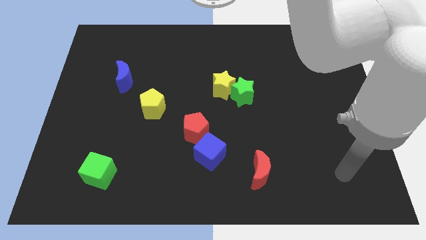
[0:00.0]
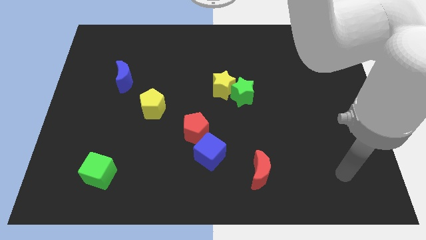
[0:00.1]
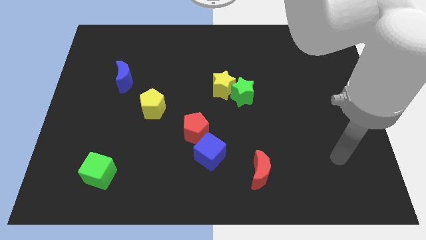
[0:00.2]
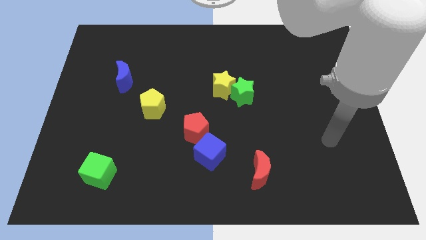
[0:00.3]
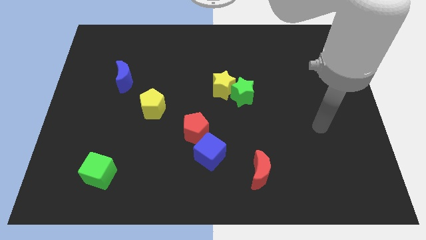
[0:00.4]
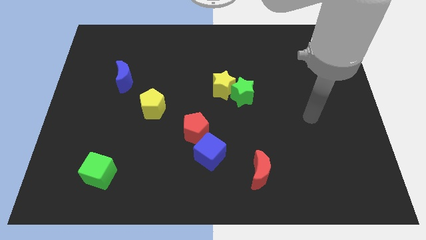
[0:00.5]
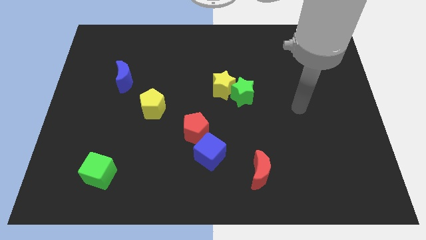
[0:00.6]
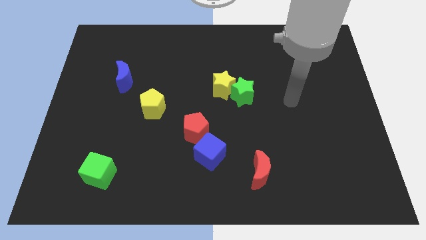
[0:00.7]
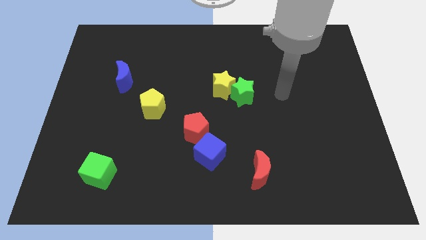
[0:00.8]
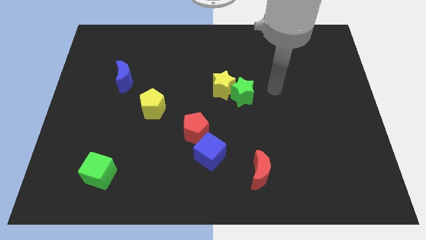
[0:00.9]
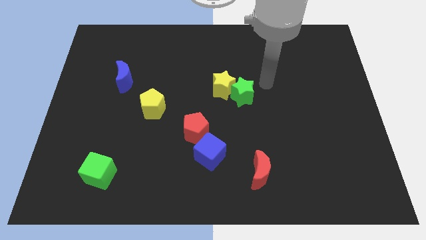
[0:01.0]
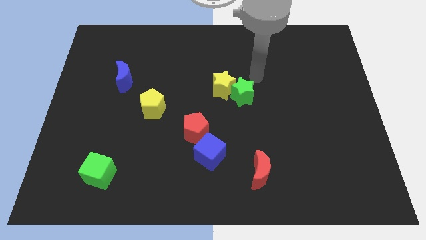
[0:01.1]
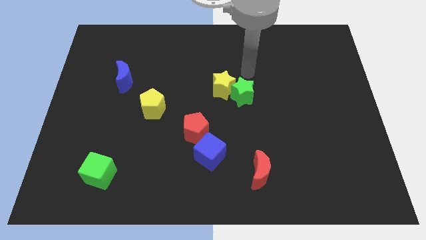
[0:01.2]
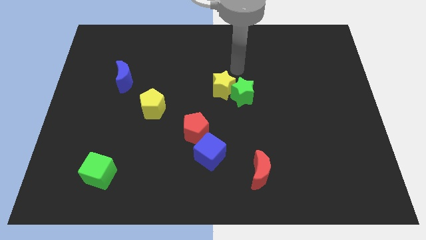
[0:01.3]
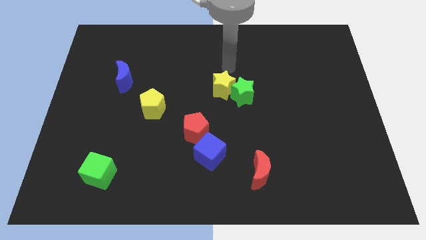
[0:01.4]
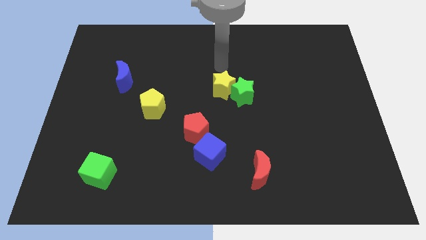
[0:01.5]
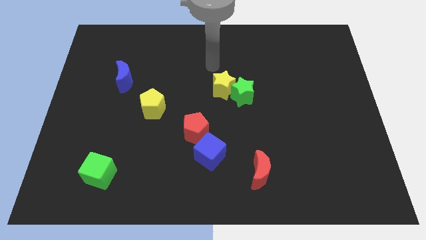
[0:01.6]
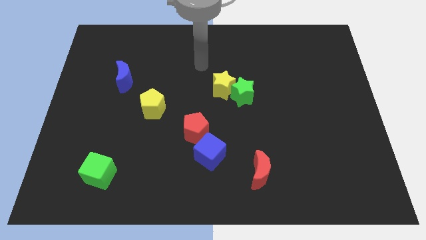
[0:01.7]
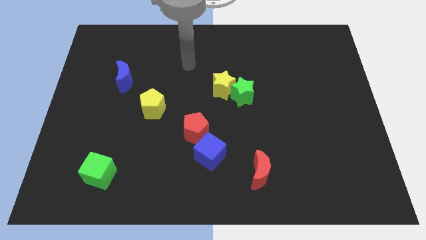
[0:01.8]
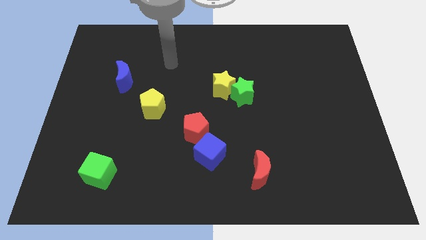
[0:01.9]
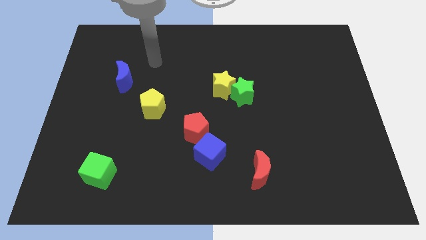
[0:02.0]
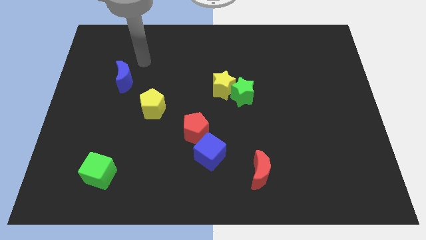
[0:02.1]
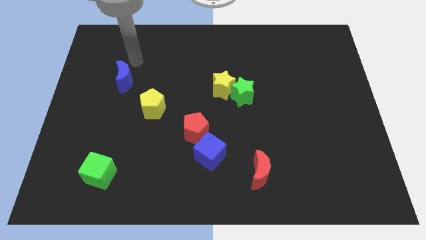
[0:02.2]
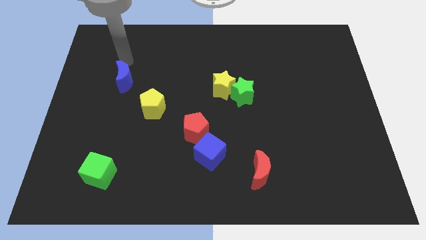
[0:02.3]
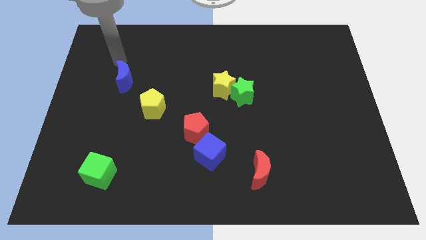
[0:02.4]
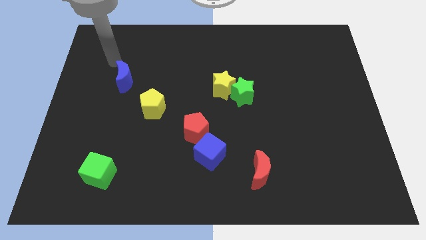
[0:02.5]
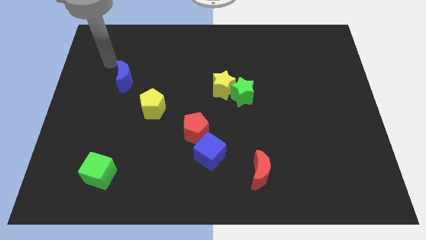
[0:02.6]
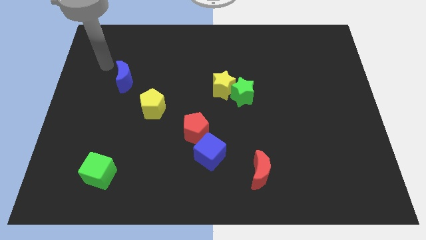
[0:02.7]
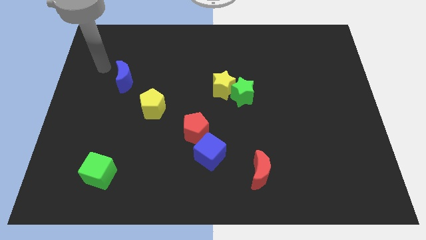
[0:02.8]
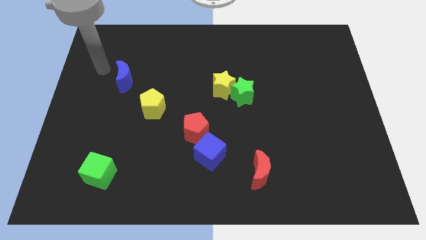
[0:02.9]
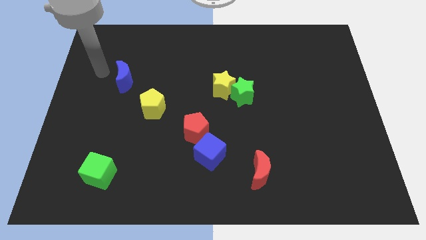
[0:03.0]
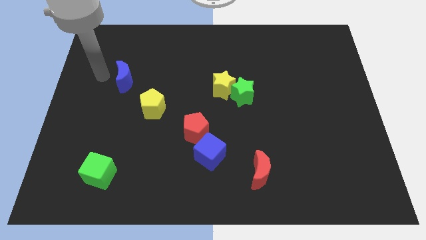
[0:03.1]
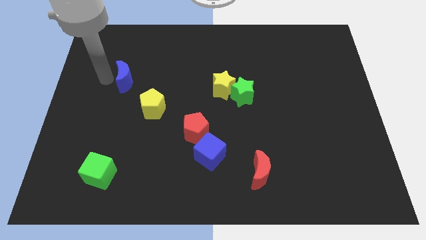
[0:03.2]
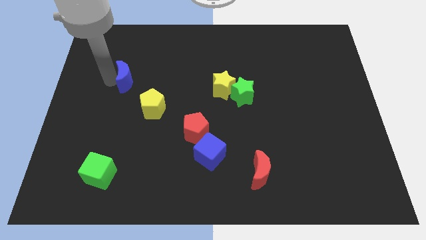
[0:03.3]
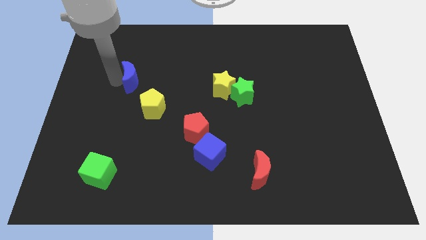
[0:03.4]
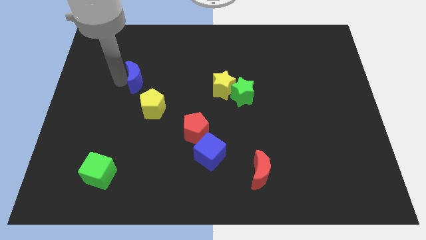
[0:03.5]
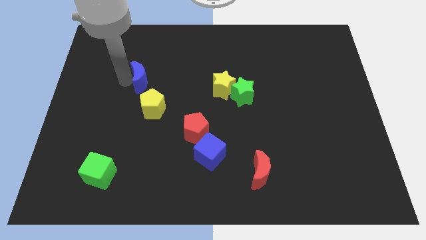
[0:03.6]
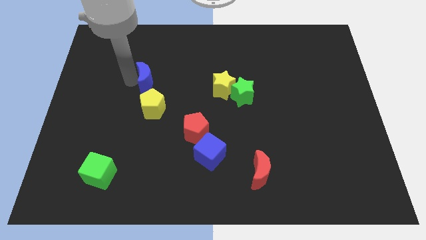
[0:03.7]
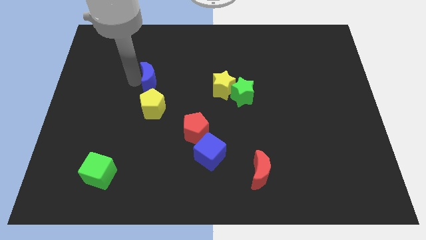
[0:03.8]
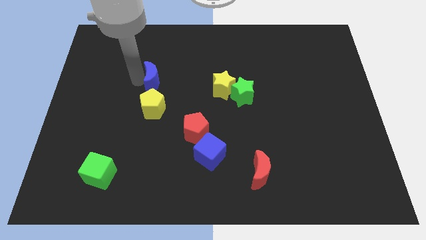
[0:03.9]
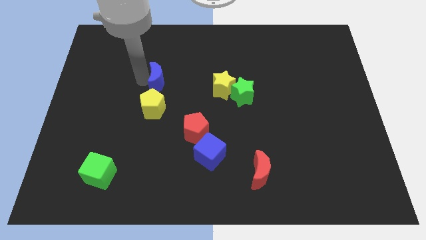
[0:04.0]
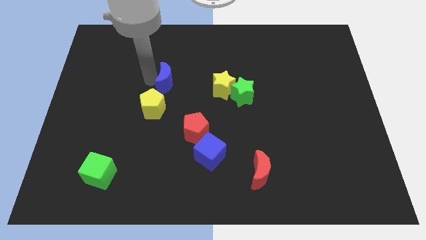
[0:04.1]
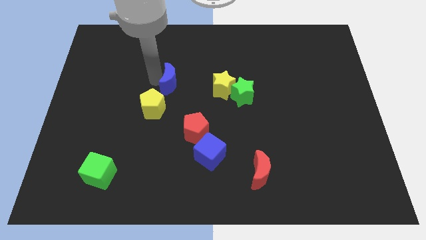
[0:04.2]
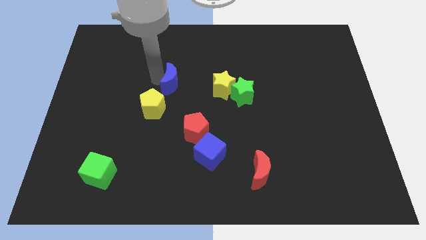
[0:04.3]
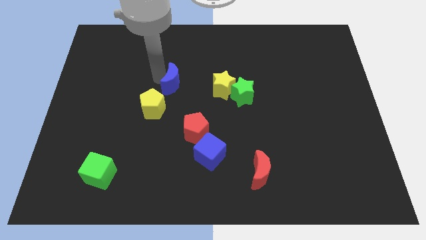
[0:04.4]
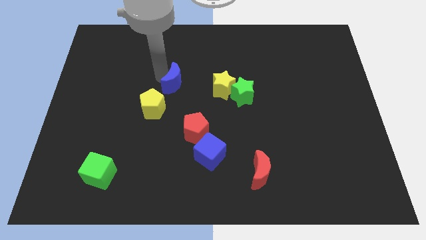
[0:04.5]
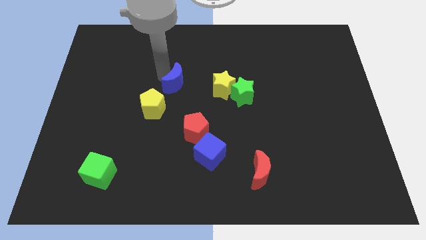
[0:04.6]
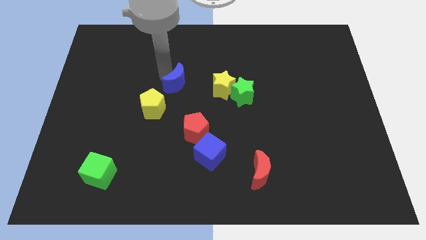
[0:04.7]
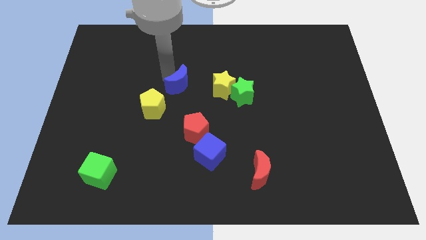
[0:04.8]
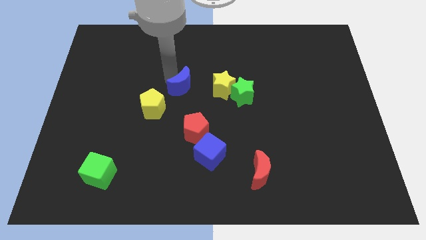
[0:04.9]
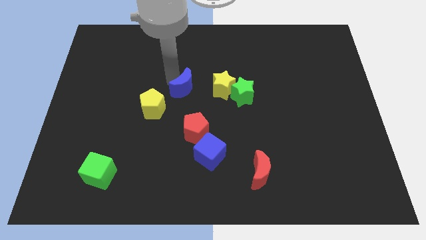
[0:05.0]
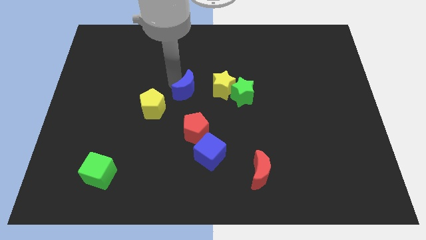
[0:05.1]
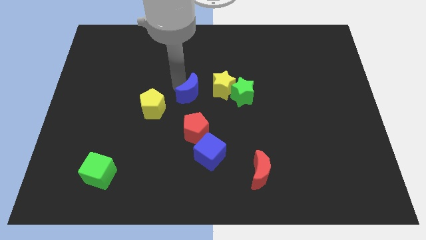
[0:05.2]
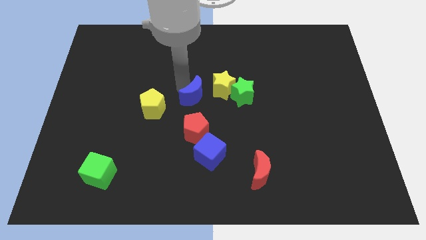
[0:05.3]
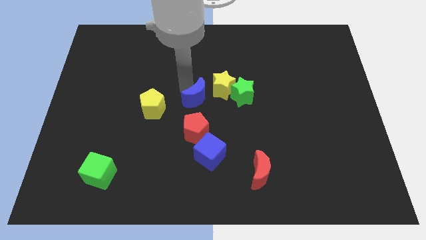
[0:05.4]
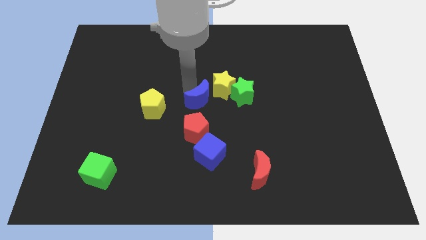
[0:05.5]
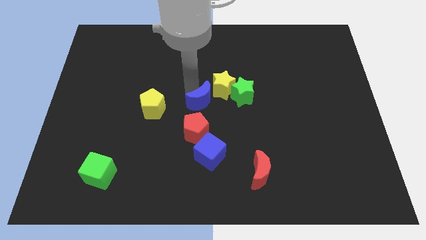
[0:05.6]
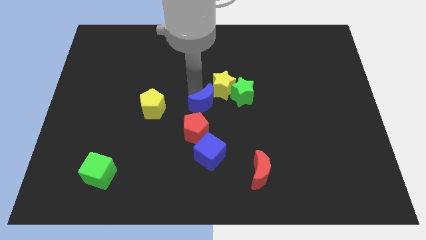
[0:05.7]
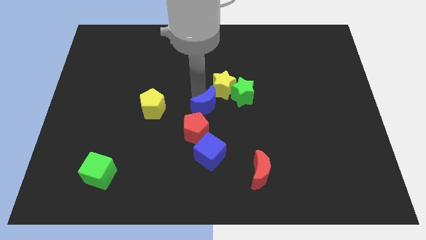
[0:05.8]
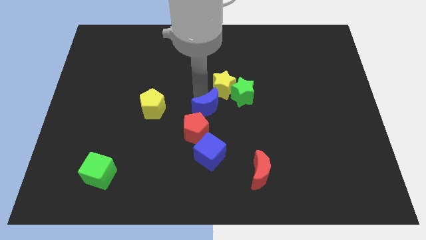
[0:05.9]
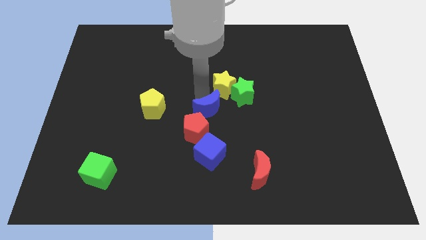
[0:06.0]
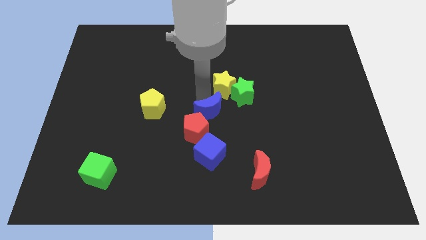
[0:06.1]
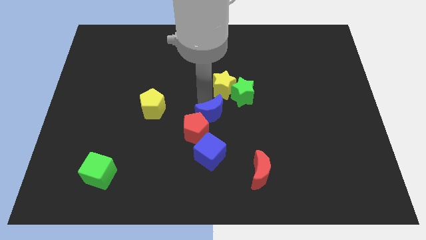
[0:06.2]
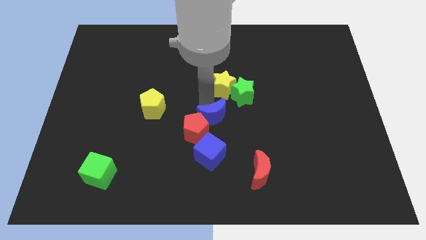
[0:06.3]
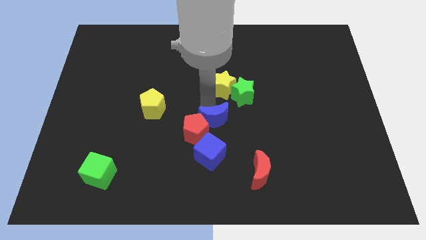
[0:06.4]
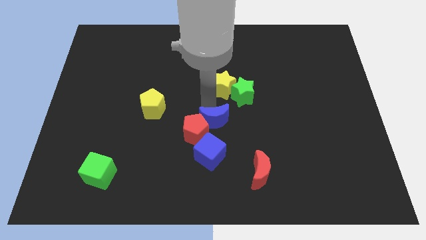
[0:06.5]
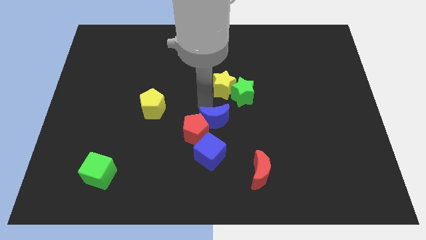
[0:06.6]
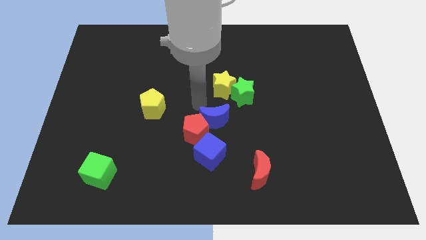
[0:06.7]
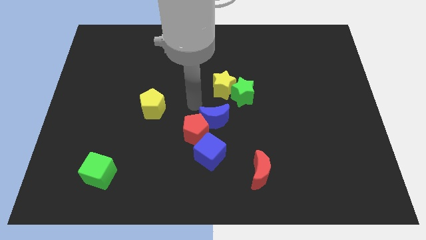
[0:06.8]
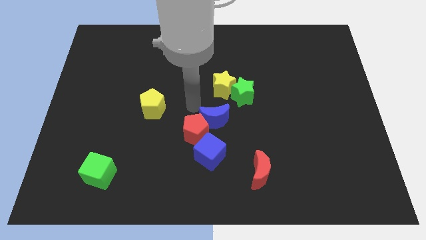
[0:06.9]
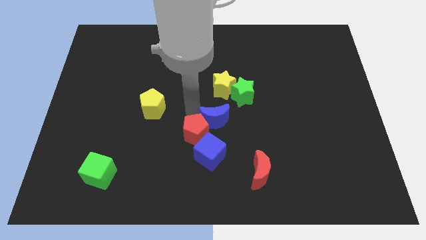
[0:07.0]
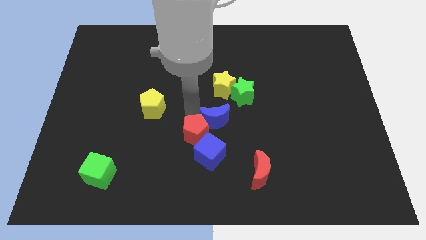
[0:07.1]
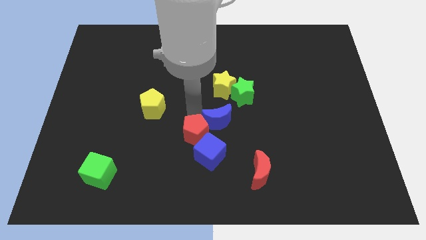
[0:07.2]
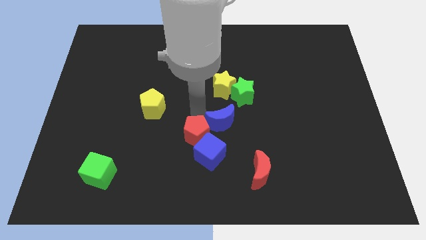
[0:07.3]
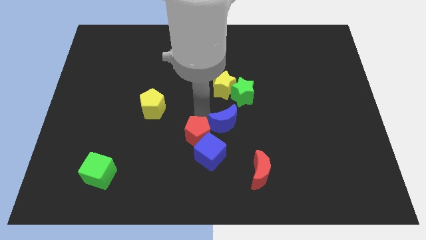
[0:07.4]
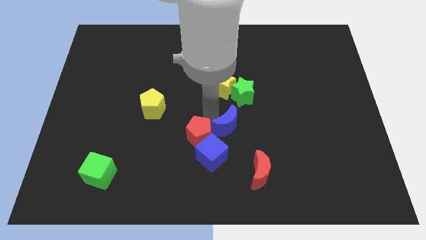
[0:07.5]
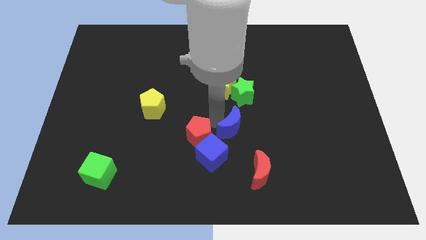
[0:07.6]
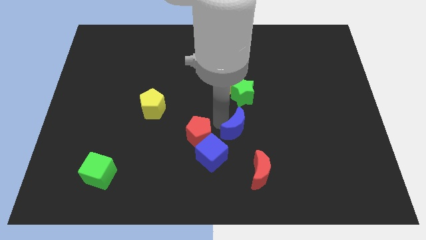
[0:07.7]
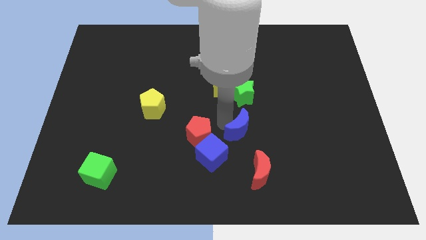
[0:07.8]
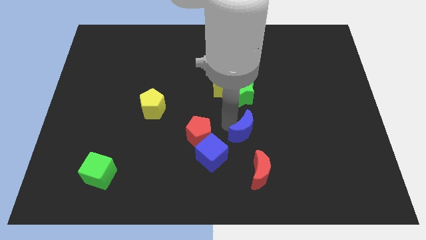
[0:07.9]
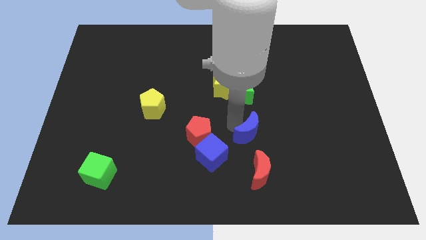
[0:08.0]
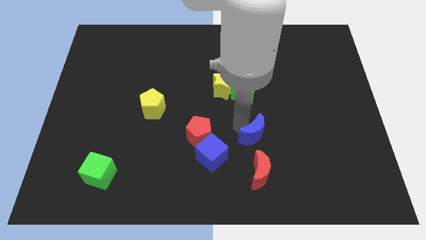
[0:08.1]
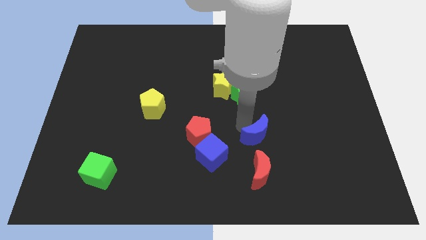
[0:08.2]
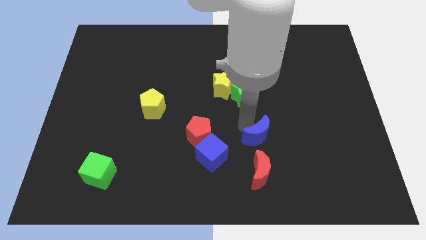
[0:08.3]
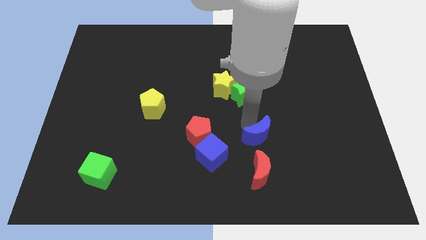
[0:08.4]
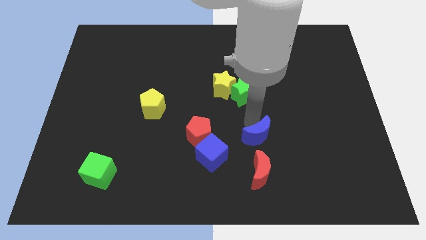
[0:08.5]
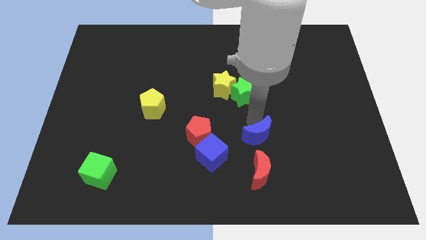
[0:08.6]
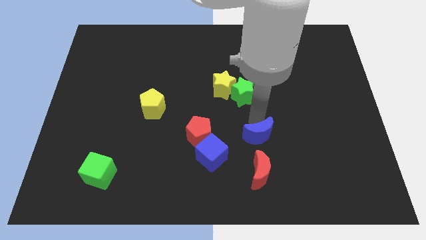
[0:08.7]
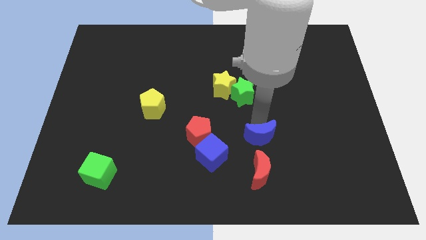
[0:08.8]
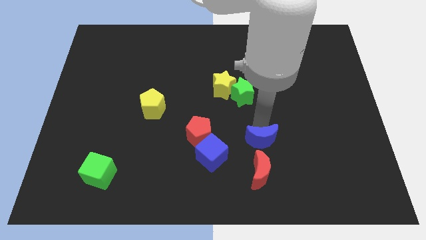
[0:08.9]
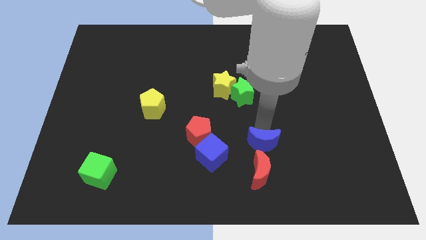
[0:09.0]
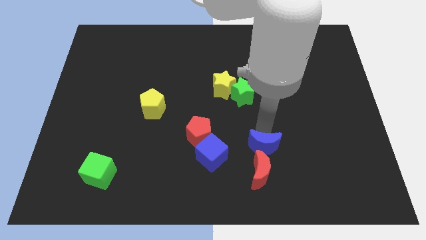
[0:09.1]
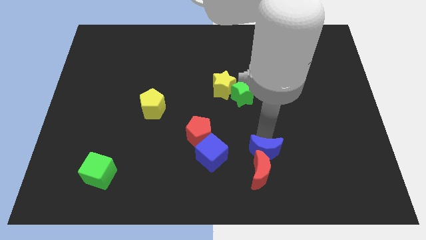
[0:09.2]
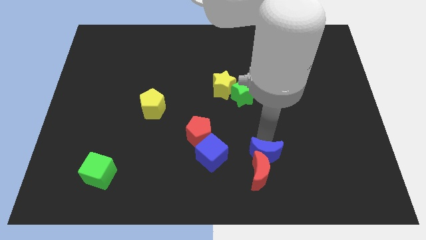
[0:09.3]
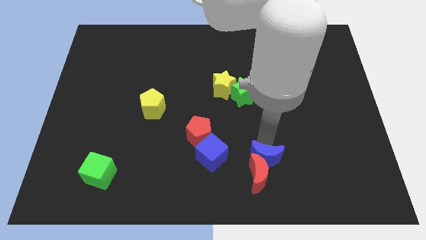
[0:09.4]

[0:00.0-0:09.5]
put the blue moon towards the red moon
